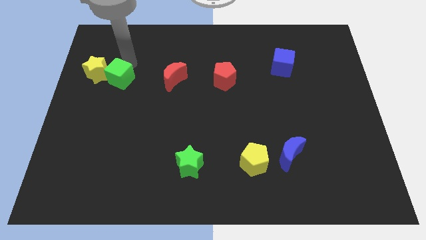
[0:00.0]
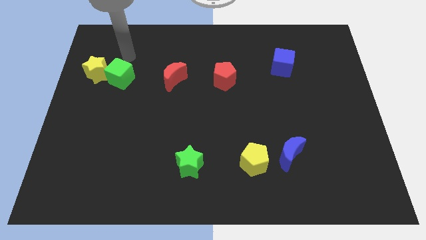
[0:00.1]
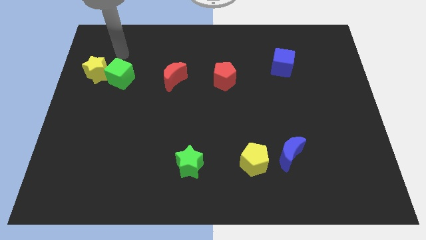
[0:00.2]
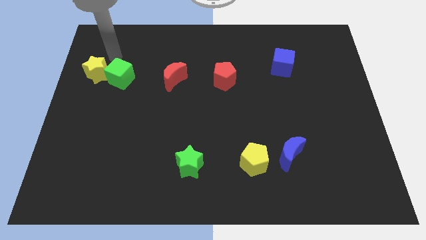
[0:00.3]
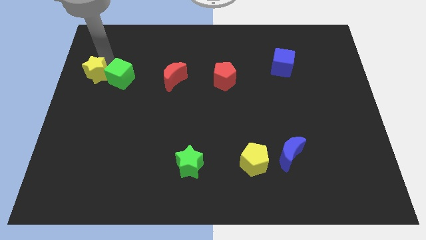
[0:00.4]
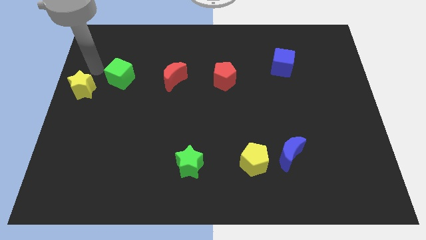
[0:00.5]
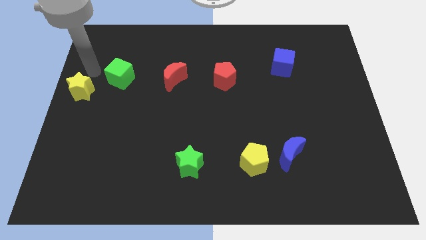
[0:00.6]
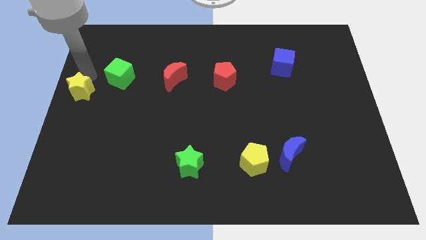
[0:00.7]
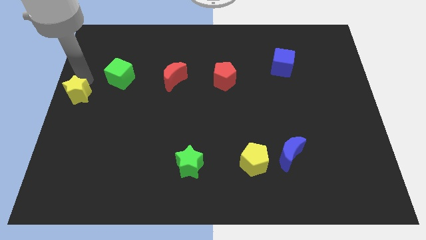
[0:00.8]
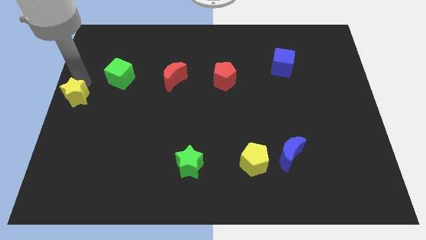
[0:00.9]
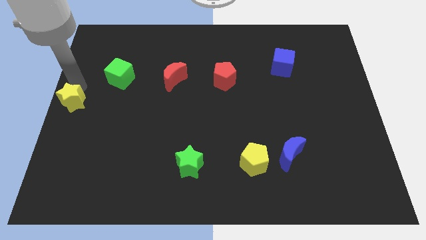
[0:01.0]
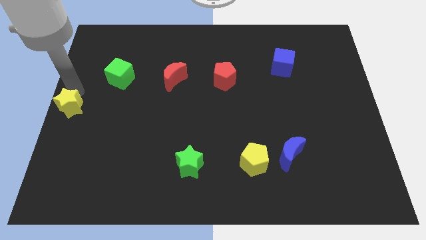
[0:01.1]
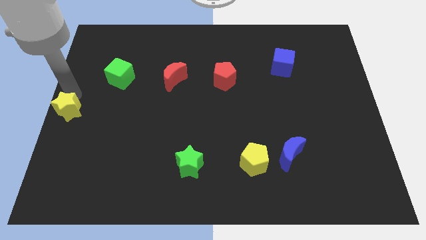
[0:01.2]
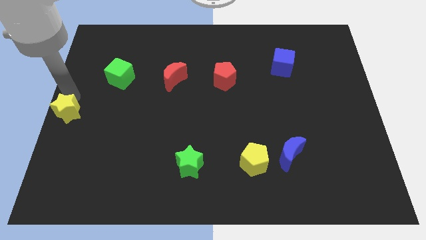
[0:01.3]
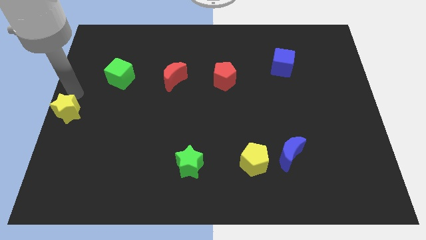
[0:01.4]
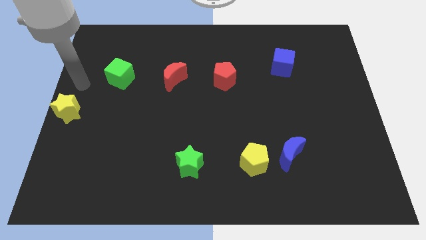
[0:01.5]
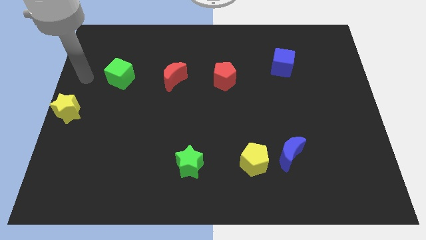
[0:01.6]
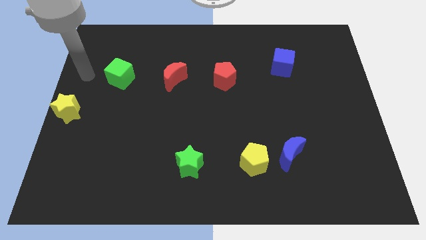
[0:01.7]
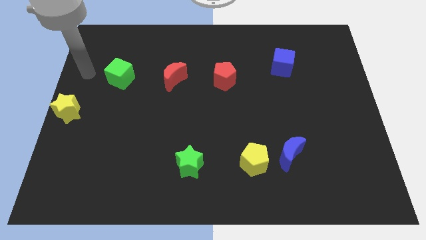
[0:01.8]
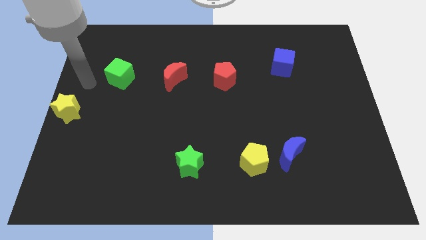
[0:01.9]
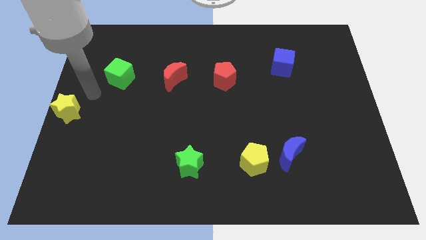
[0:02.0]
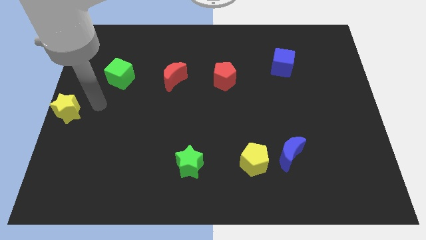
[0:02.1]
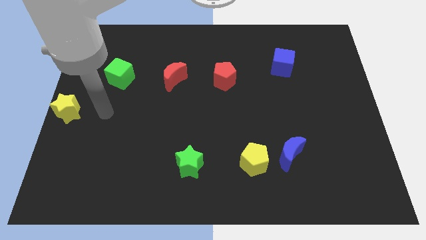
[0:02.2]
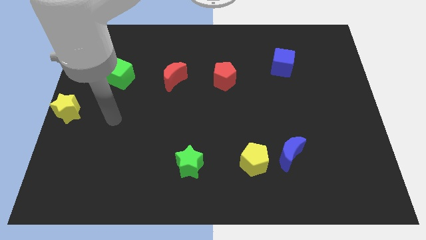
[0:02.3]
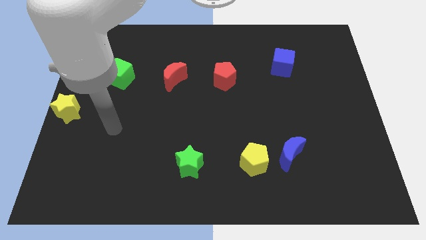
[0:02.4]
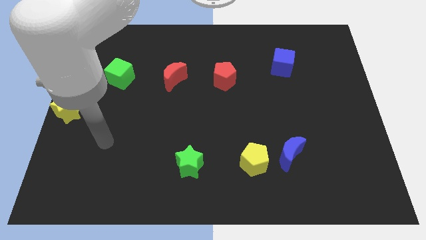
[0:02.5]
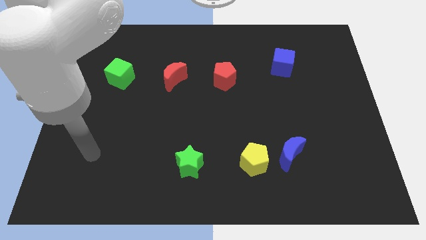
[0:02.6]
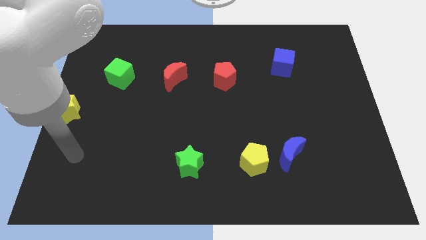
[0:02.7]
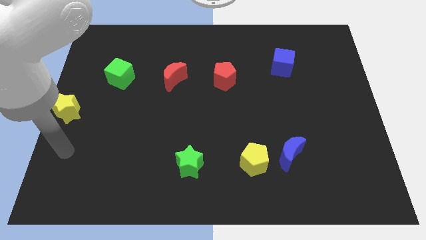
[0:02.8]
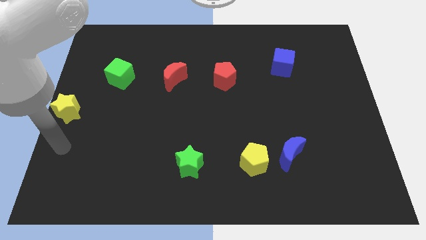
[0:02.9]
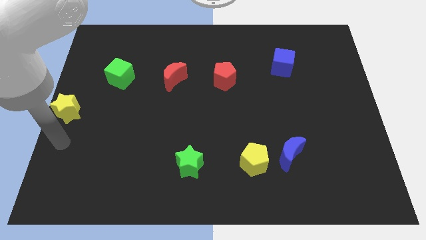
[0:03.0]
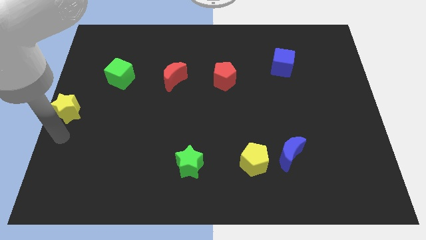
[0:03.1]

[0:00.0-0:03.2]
separate yellow star from the green cube

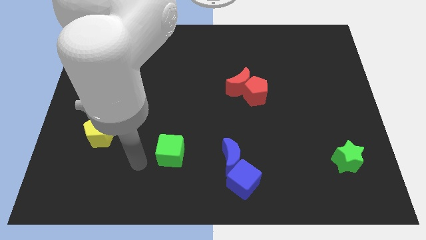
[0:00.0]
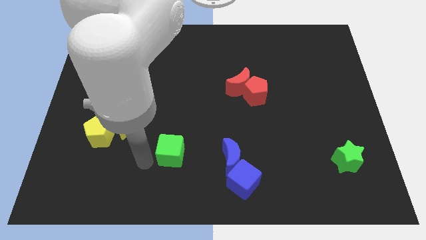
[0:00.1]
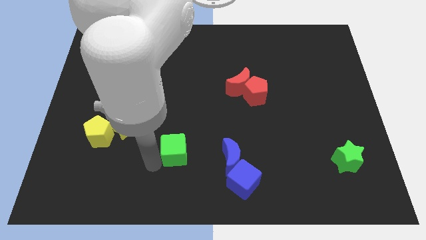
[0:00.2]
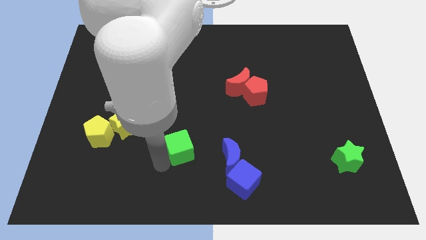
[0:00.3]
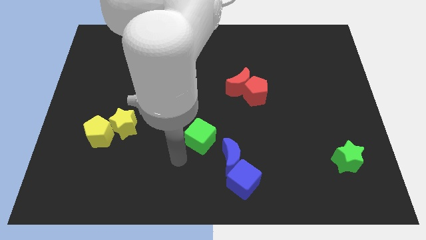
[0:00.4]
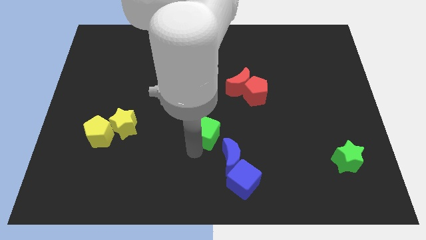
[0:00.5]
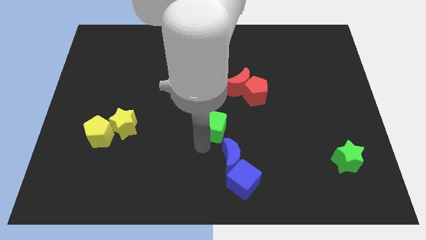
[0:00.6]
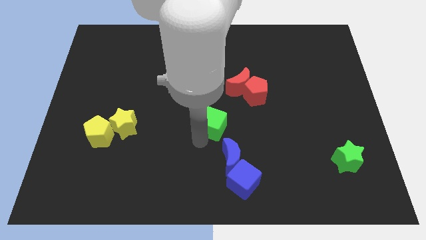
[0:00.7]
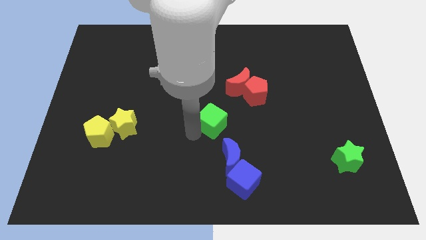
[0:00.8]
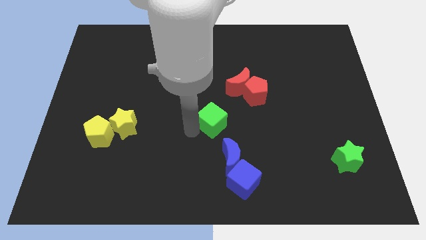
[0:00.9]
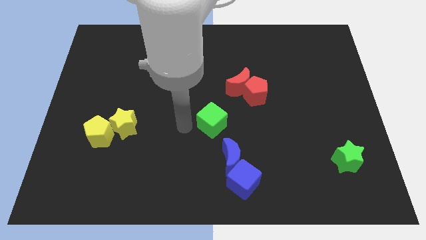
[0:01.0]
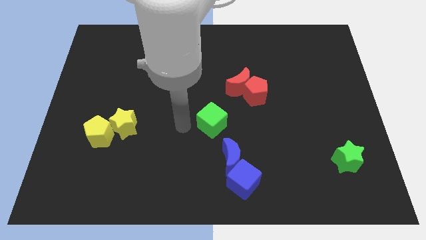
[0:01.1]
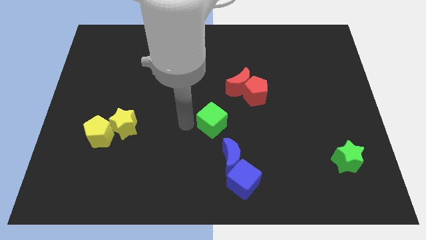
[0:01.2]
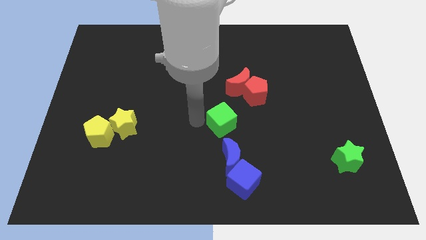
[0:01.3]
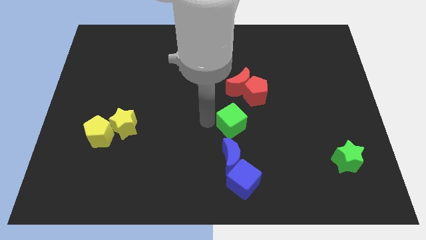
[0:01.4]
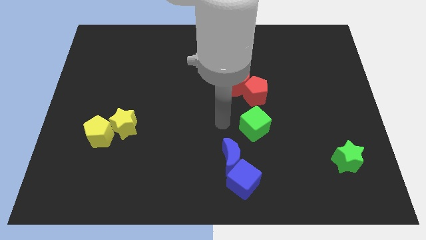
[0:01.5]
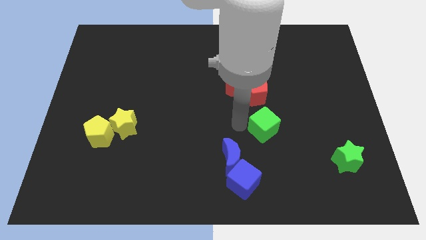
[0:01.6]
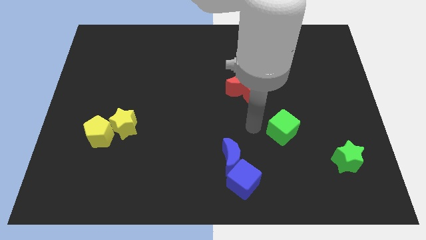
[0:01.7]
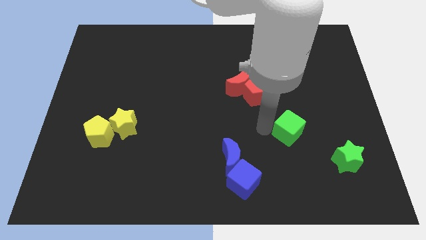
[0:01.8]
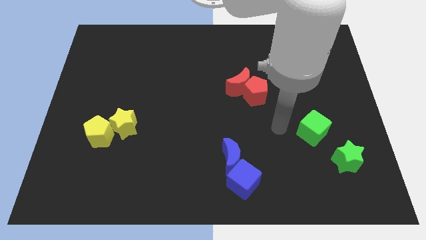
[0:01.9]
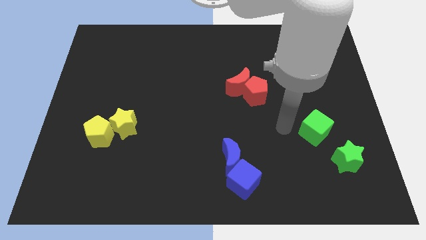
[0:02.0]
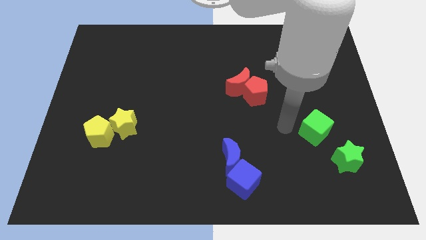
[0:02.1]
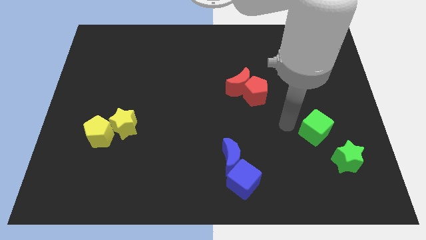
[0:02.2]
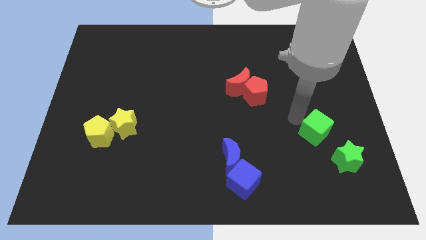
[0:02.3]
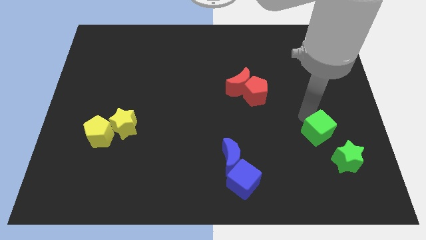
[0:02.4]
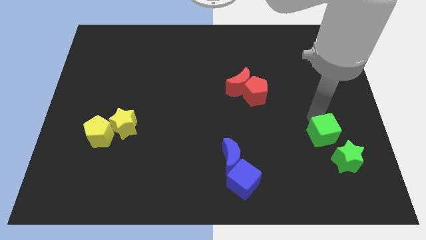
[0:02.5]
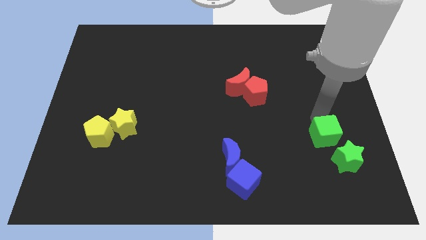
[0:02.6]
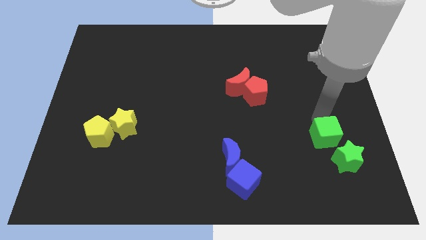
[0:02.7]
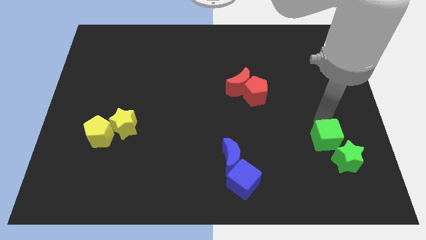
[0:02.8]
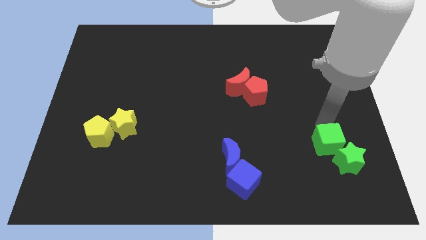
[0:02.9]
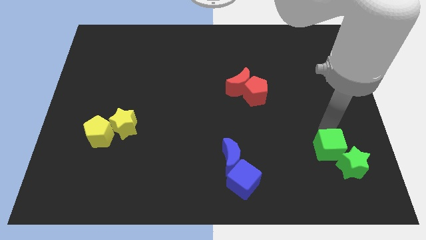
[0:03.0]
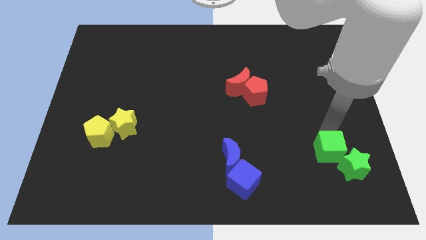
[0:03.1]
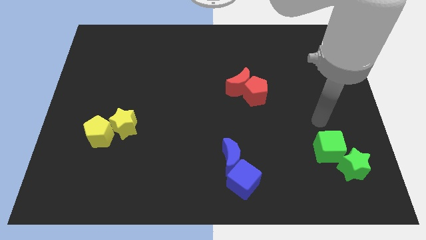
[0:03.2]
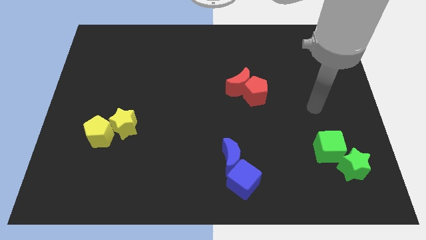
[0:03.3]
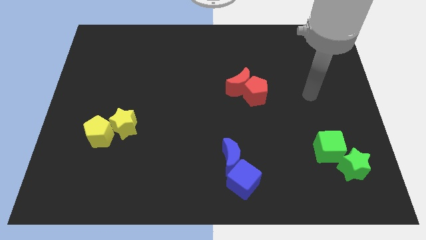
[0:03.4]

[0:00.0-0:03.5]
push the green cube to the top left of the green star

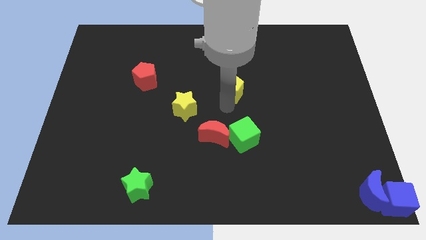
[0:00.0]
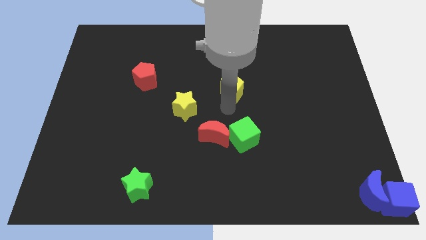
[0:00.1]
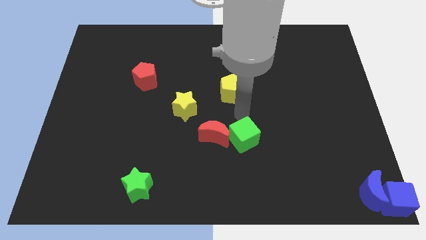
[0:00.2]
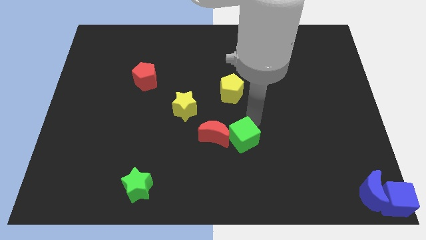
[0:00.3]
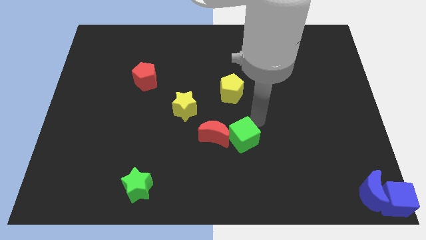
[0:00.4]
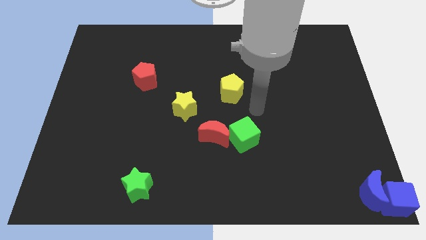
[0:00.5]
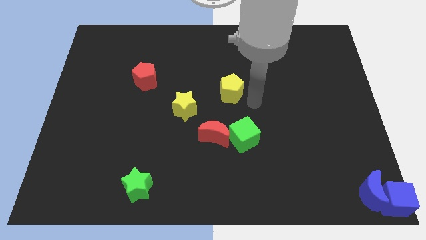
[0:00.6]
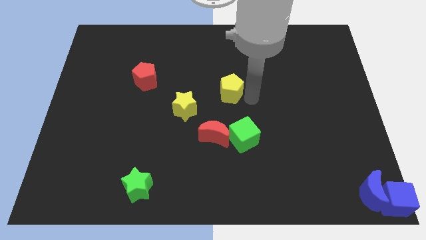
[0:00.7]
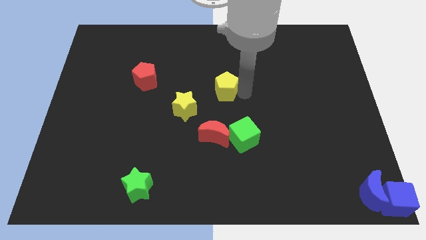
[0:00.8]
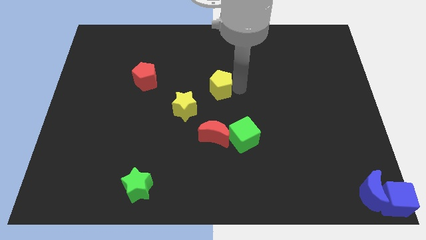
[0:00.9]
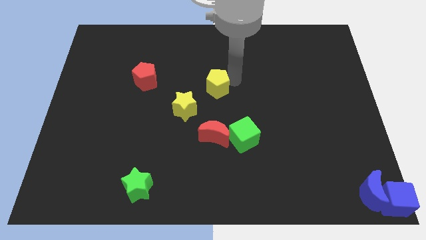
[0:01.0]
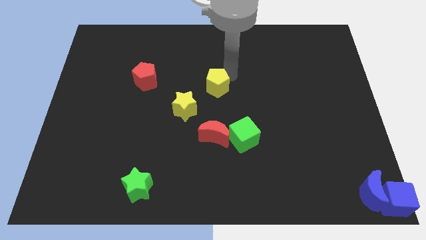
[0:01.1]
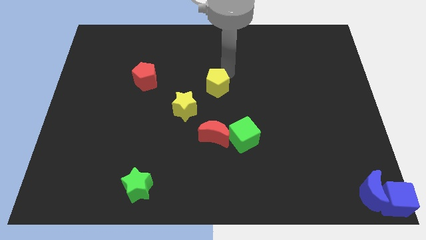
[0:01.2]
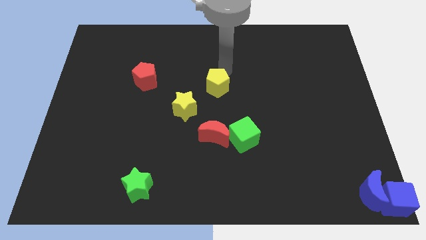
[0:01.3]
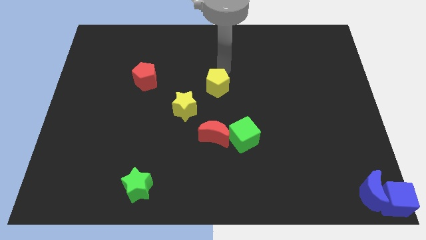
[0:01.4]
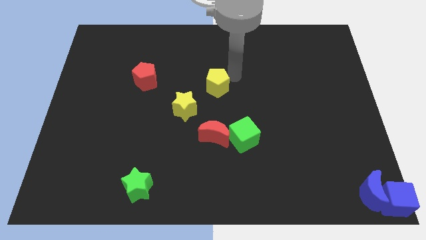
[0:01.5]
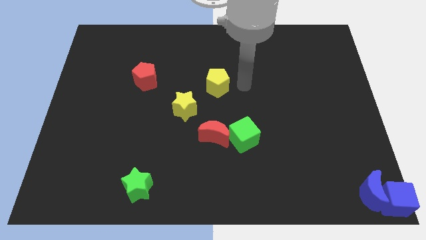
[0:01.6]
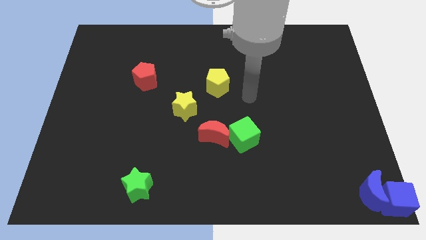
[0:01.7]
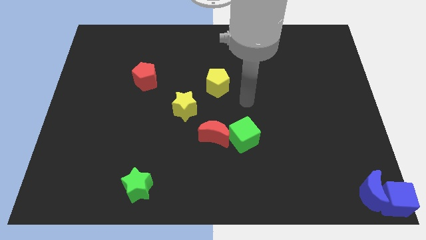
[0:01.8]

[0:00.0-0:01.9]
place the yellow pentagon diagonal to yellow star

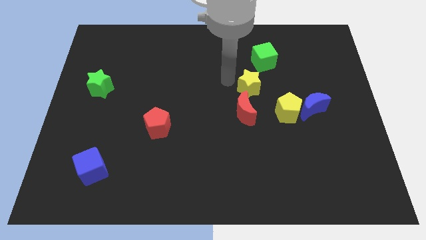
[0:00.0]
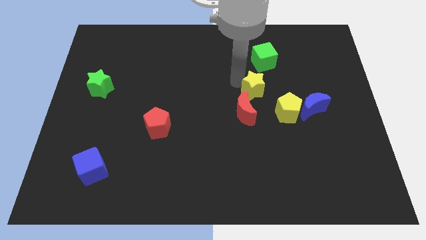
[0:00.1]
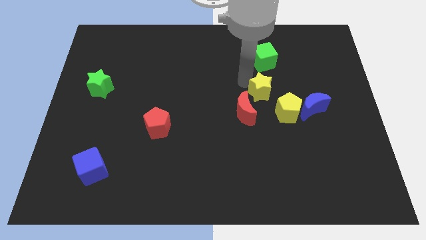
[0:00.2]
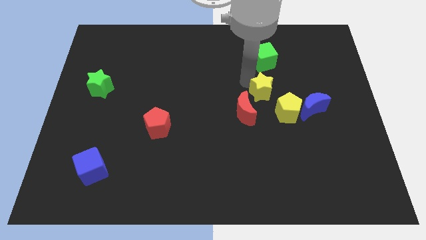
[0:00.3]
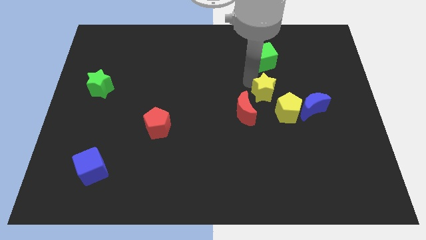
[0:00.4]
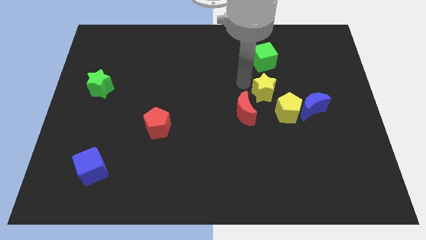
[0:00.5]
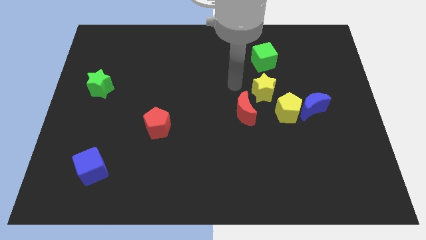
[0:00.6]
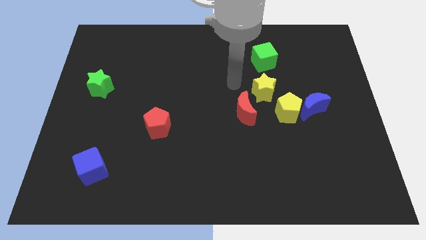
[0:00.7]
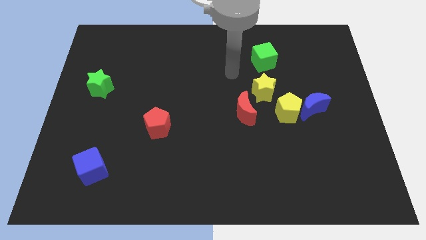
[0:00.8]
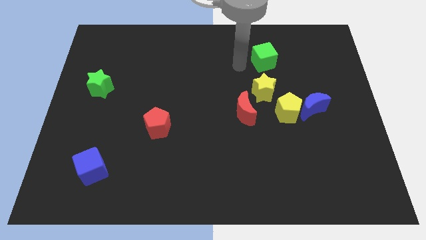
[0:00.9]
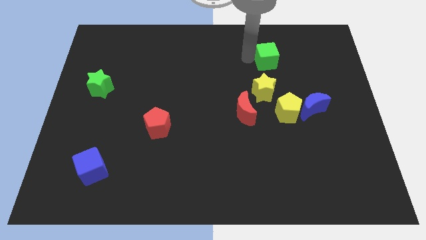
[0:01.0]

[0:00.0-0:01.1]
separate yellow star from the red moon
